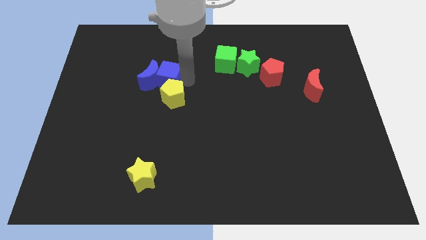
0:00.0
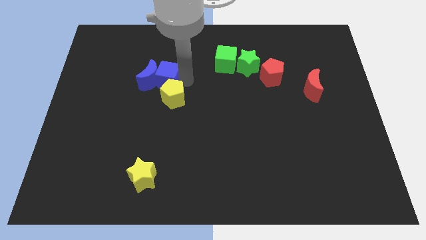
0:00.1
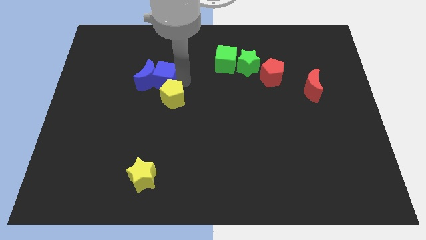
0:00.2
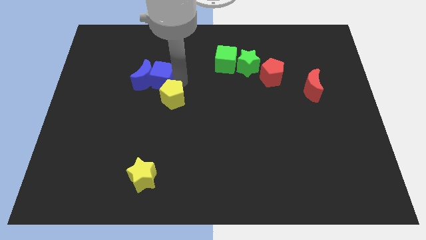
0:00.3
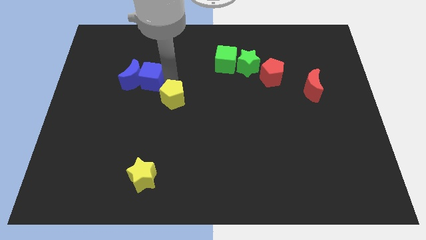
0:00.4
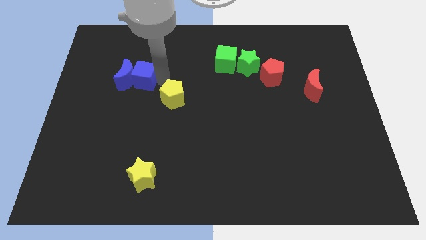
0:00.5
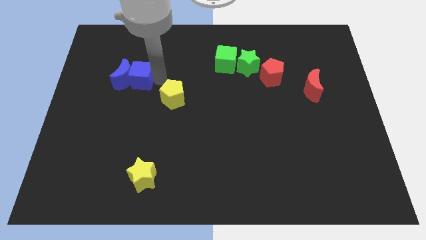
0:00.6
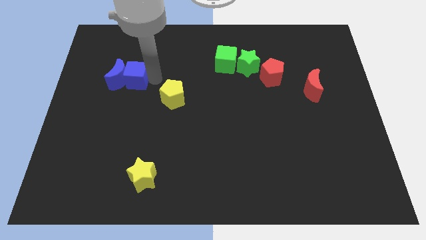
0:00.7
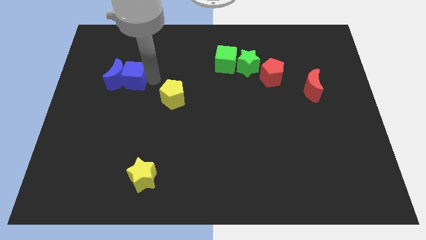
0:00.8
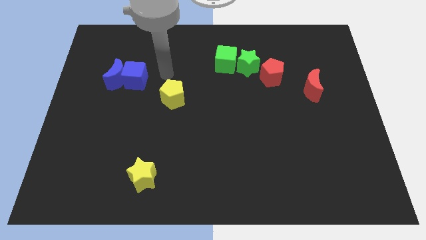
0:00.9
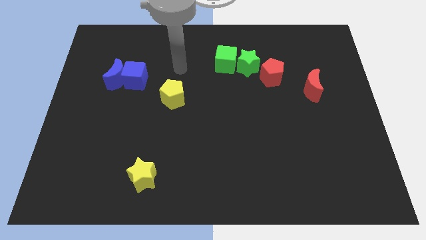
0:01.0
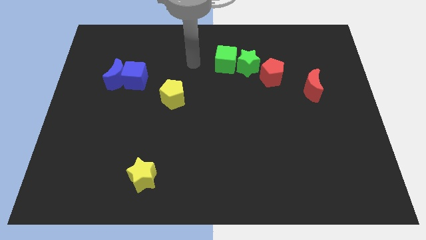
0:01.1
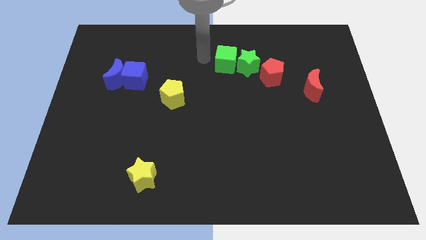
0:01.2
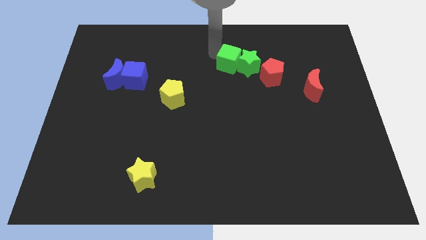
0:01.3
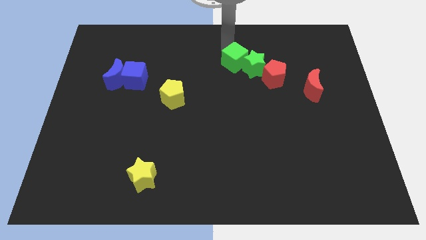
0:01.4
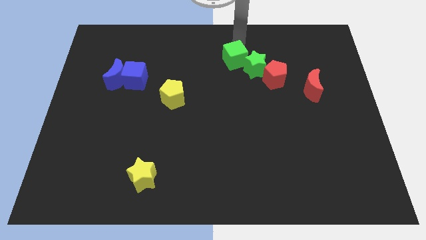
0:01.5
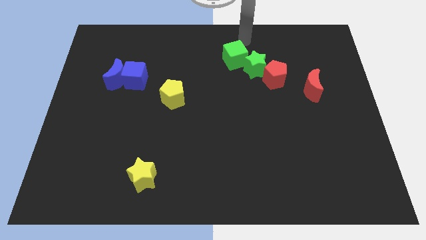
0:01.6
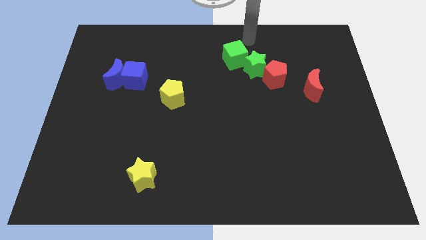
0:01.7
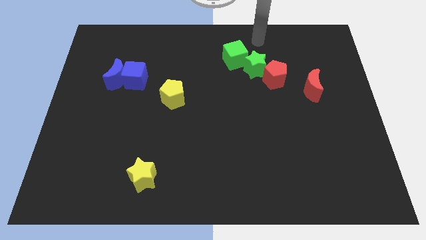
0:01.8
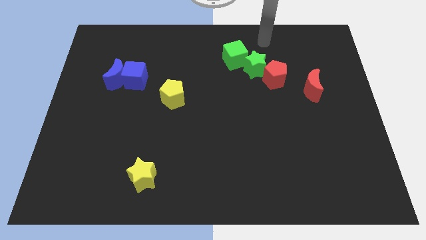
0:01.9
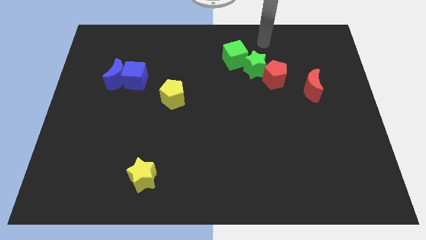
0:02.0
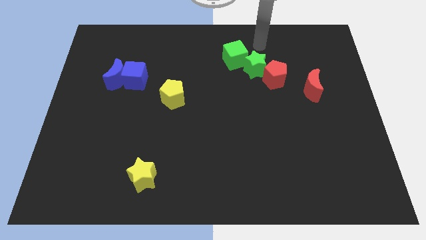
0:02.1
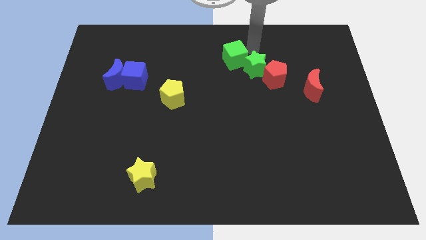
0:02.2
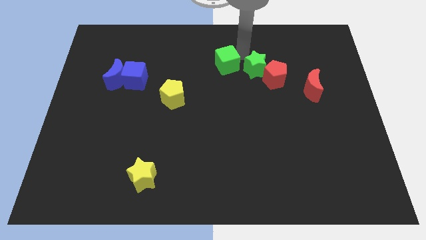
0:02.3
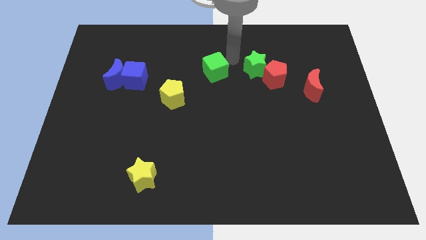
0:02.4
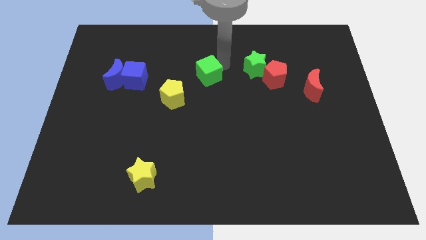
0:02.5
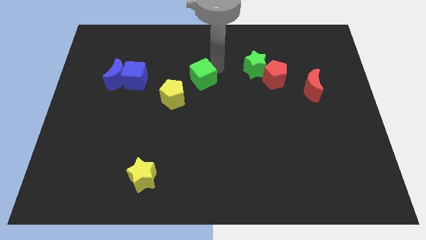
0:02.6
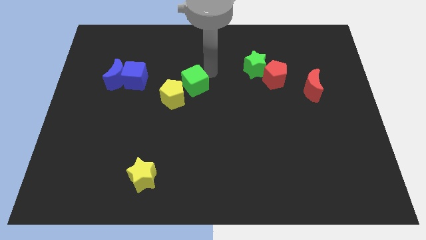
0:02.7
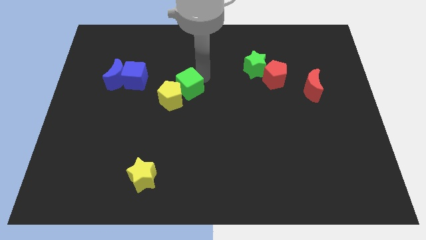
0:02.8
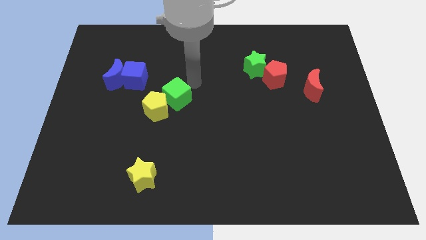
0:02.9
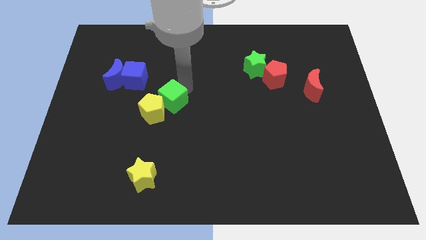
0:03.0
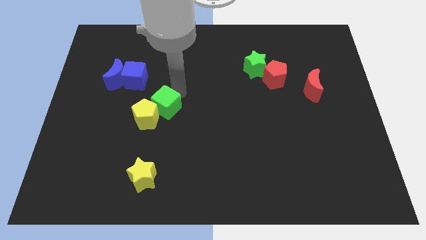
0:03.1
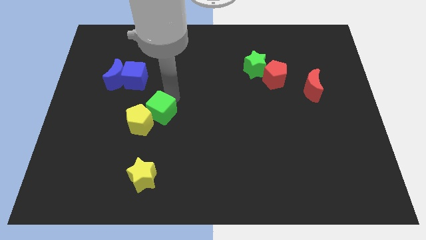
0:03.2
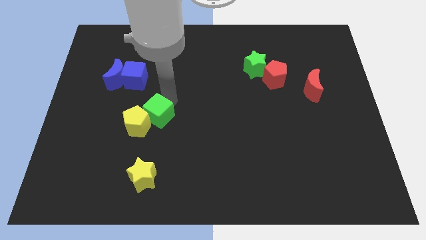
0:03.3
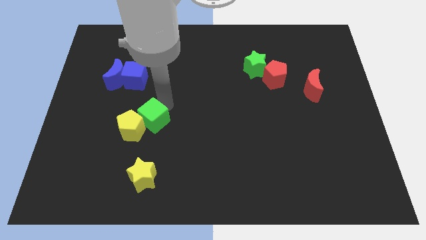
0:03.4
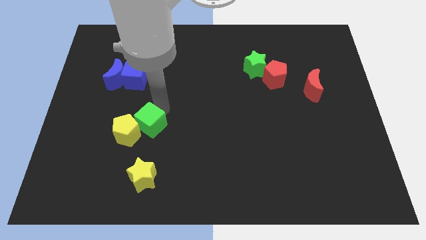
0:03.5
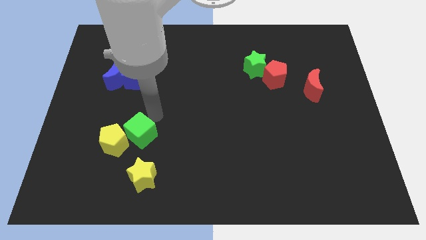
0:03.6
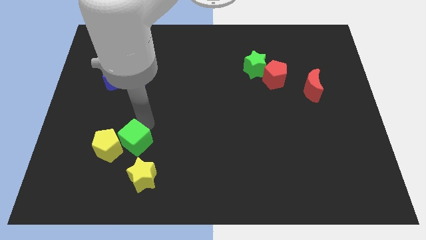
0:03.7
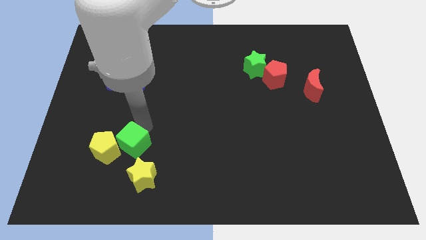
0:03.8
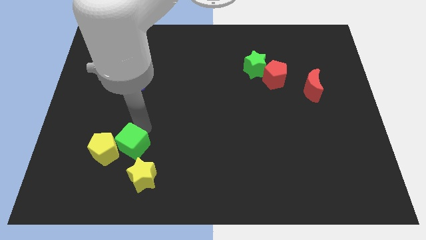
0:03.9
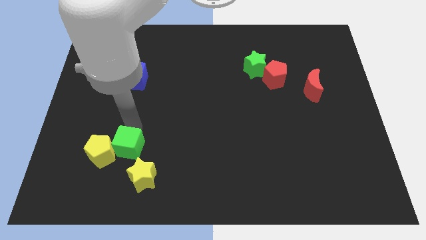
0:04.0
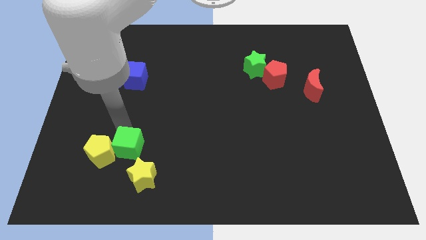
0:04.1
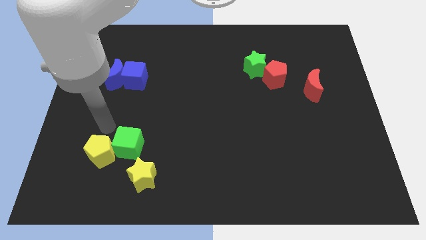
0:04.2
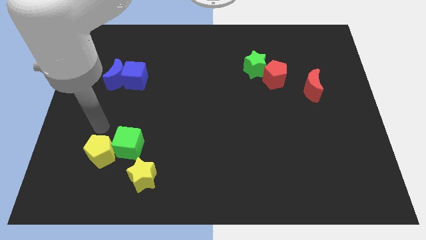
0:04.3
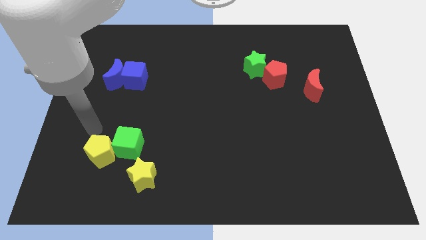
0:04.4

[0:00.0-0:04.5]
push the blue moon slightly to the left of board with a blue cube and push yellow pentagon with the green cube towards bottom of the board

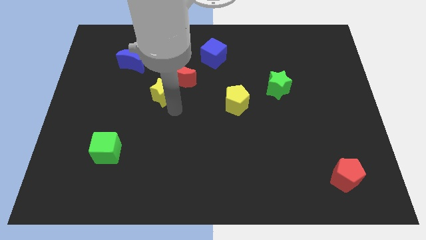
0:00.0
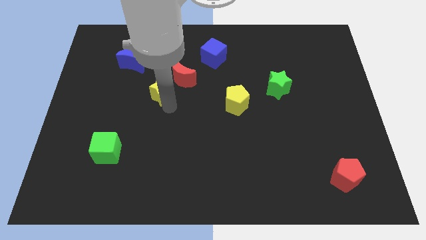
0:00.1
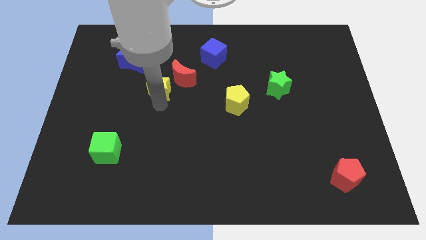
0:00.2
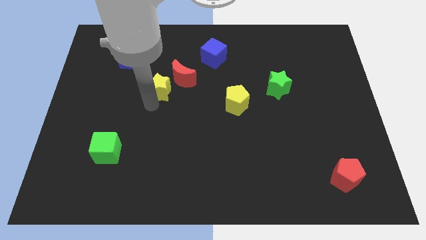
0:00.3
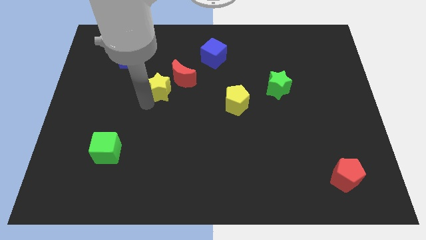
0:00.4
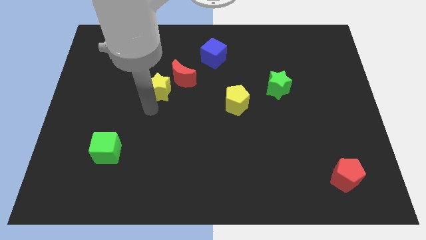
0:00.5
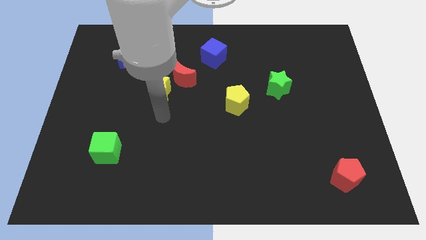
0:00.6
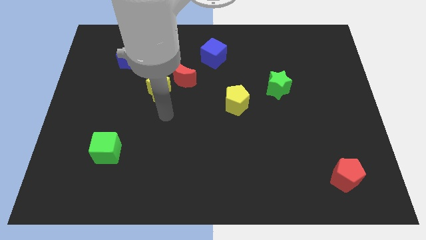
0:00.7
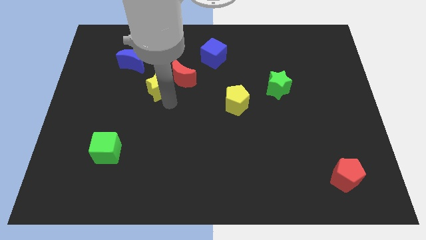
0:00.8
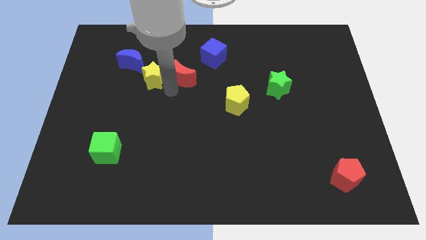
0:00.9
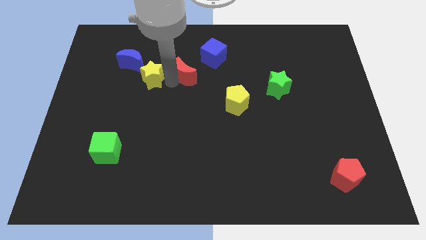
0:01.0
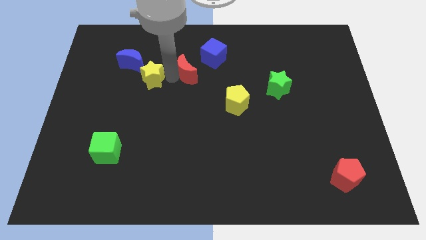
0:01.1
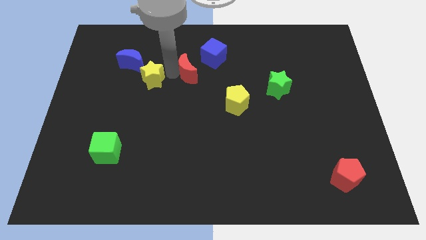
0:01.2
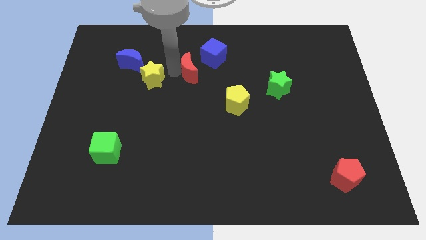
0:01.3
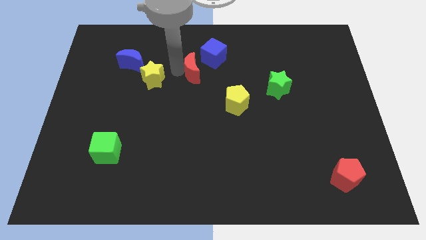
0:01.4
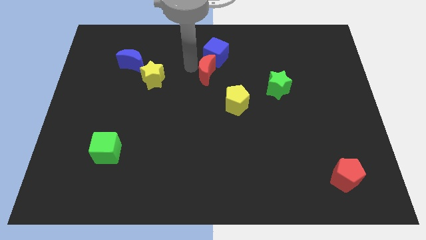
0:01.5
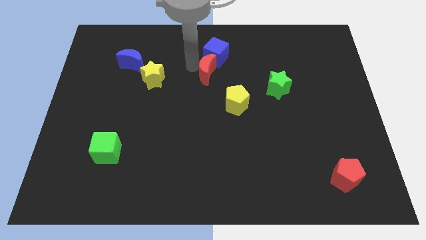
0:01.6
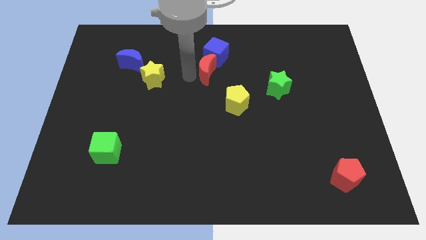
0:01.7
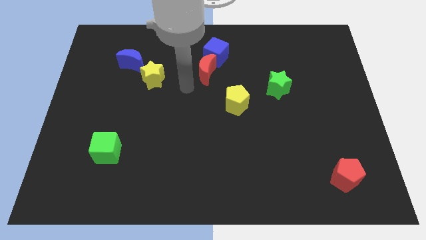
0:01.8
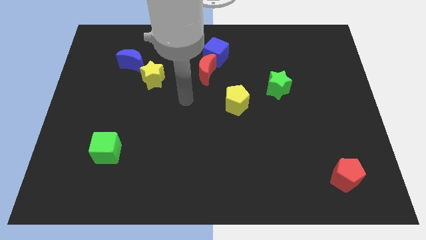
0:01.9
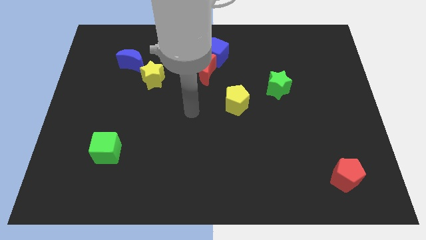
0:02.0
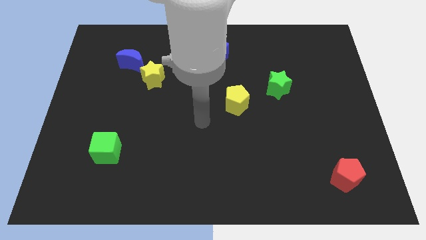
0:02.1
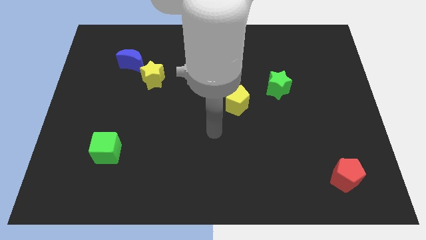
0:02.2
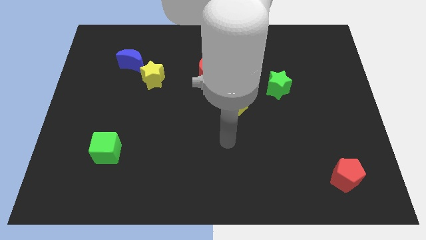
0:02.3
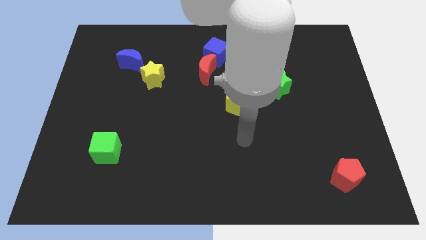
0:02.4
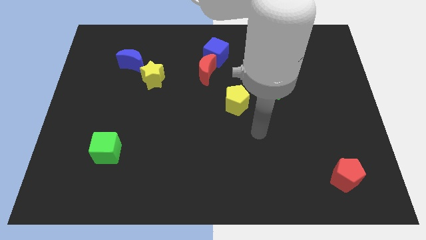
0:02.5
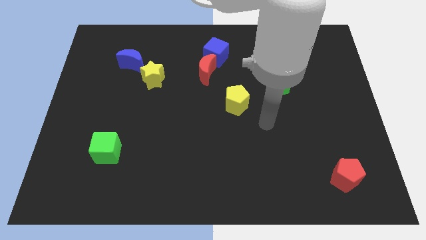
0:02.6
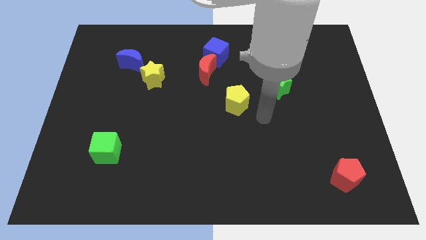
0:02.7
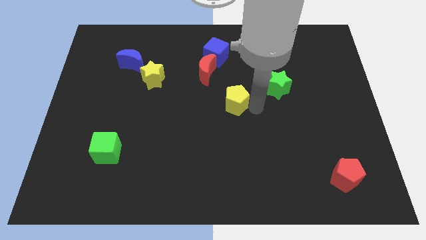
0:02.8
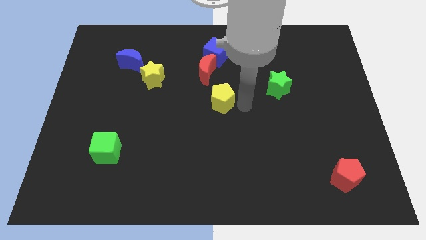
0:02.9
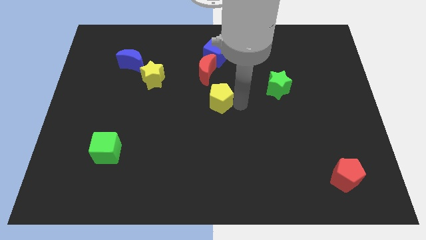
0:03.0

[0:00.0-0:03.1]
place the yellow star below to the right of the blue crescent

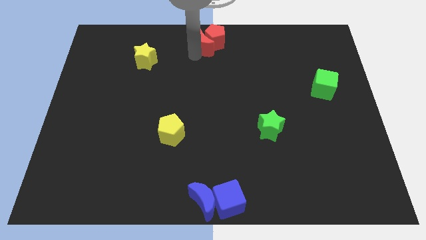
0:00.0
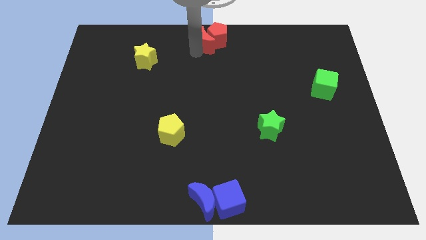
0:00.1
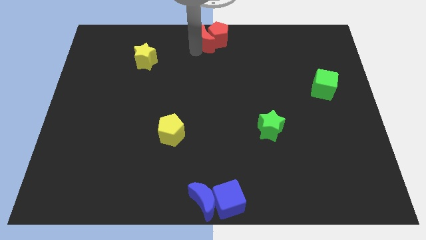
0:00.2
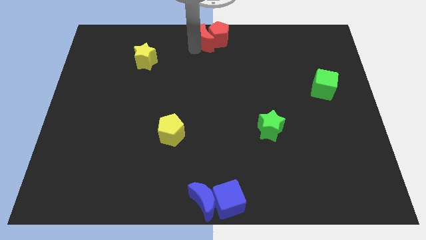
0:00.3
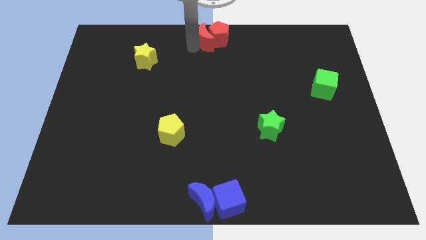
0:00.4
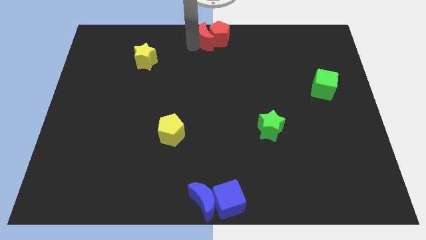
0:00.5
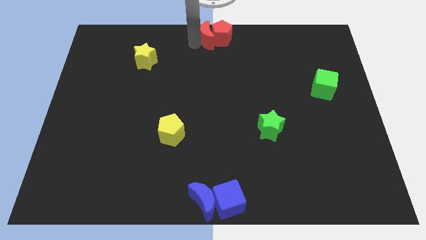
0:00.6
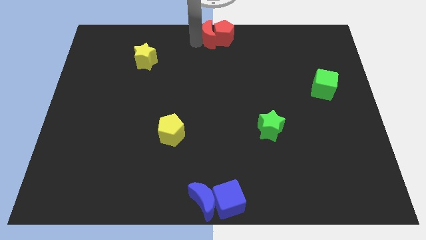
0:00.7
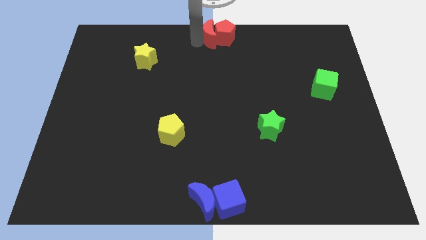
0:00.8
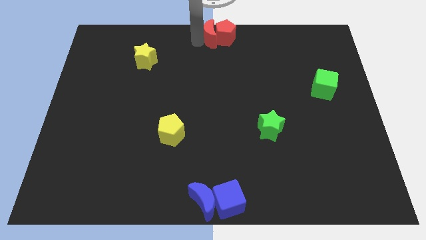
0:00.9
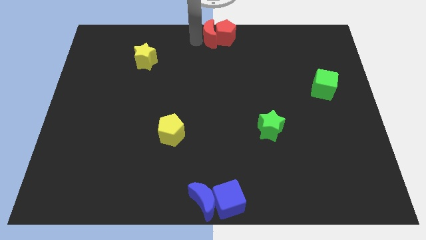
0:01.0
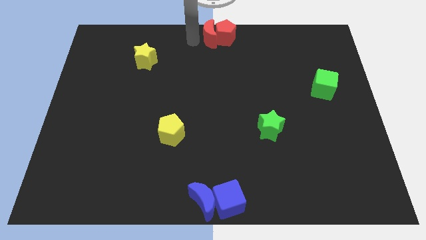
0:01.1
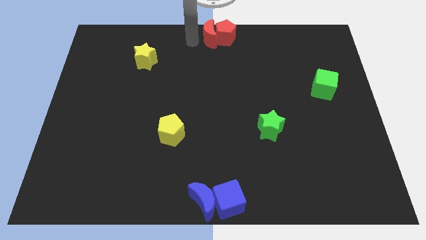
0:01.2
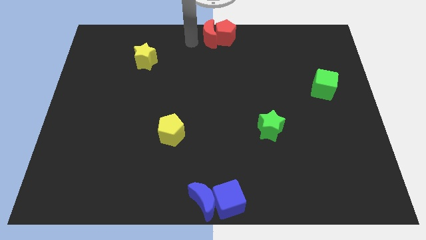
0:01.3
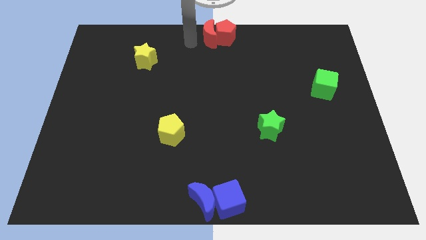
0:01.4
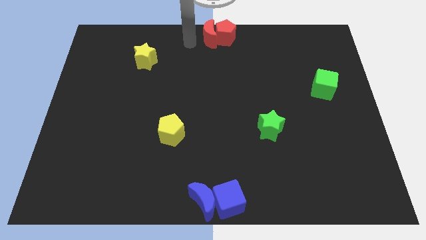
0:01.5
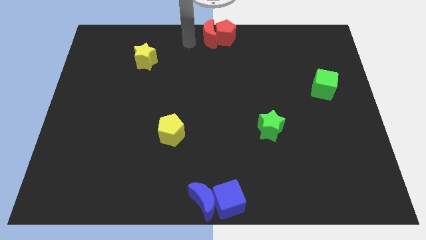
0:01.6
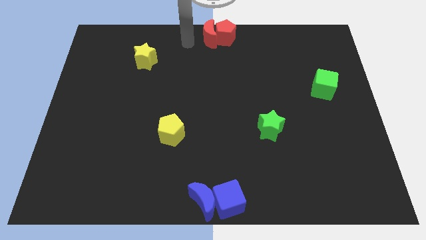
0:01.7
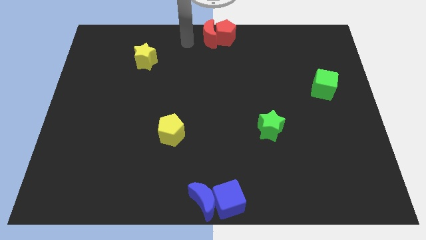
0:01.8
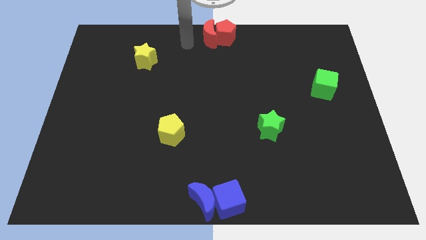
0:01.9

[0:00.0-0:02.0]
place red crescent and red pentagon top center
